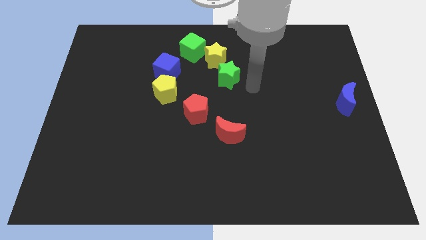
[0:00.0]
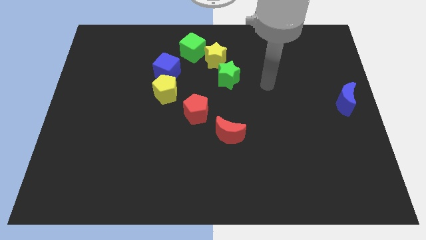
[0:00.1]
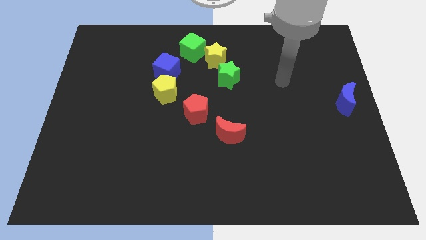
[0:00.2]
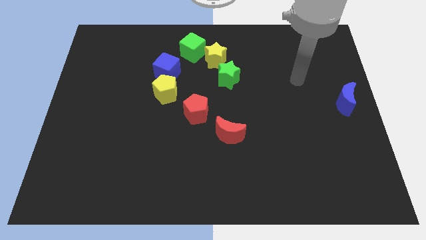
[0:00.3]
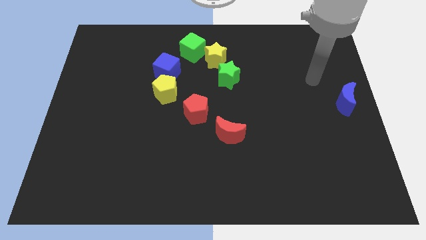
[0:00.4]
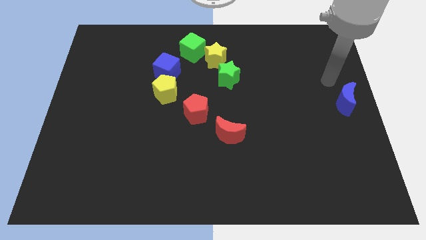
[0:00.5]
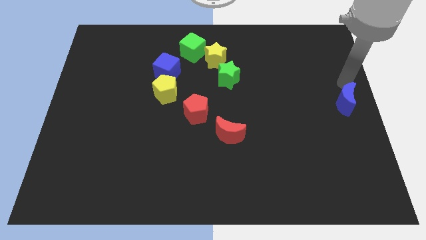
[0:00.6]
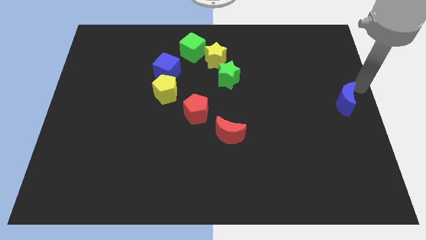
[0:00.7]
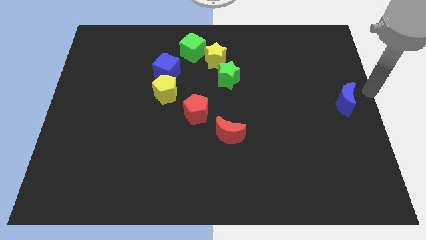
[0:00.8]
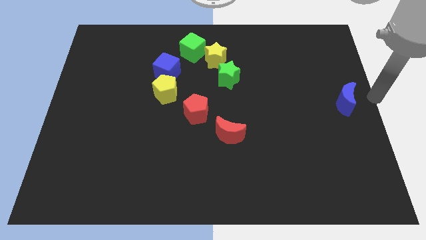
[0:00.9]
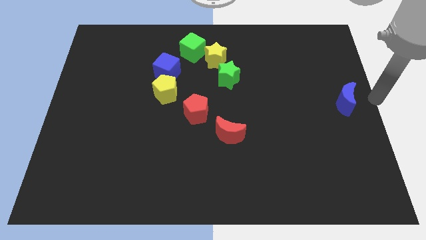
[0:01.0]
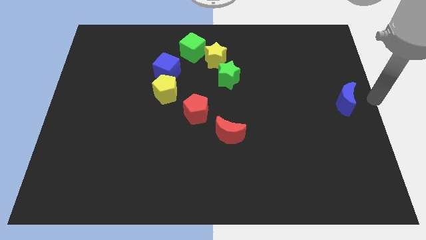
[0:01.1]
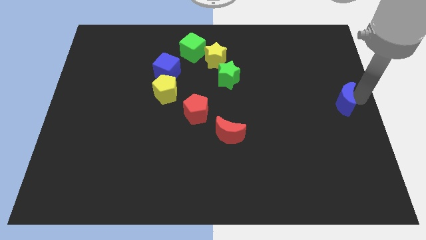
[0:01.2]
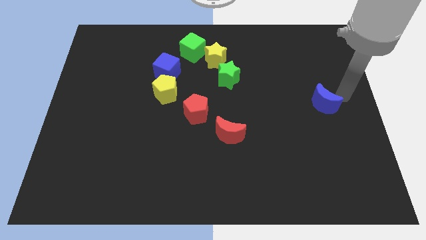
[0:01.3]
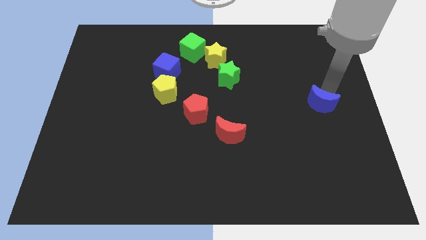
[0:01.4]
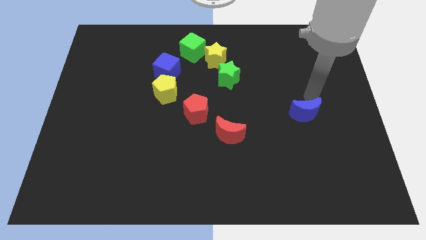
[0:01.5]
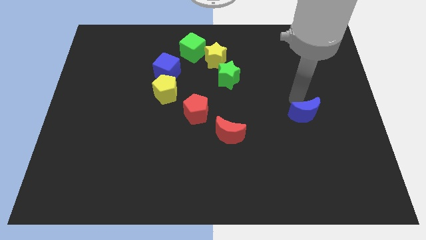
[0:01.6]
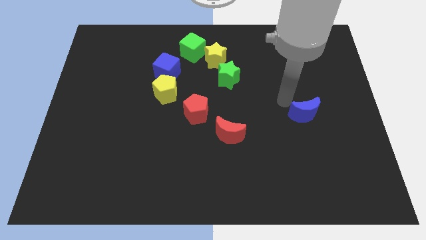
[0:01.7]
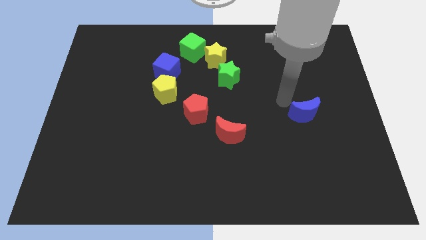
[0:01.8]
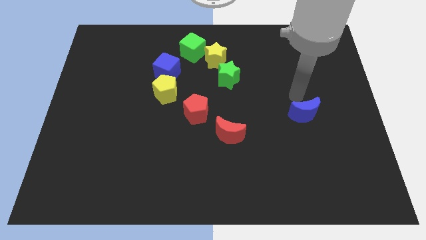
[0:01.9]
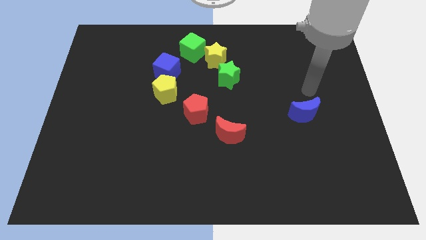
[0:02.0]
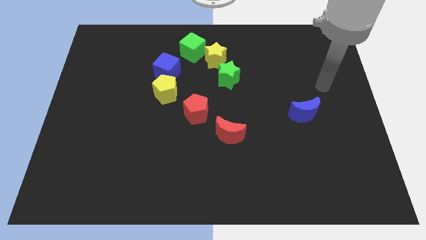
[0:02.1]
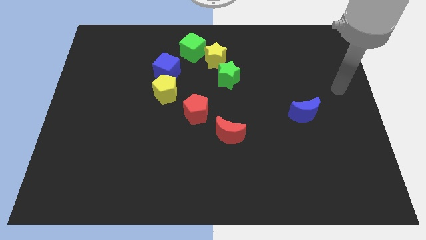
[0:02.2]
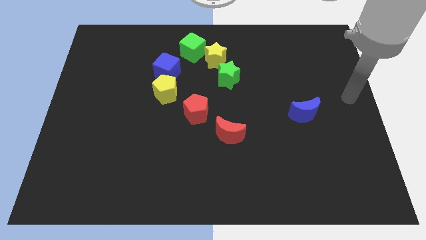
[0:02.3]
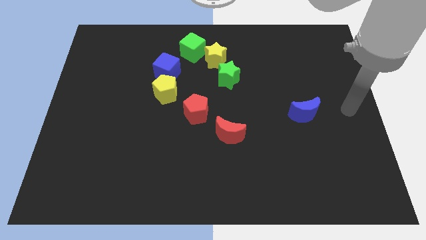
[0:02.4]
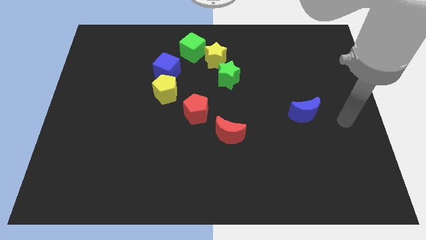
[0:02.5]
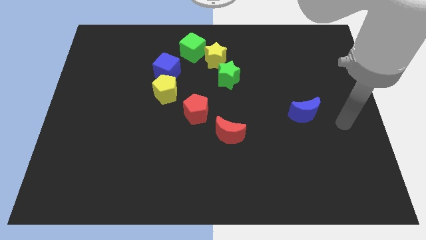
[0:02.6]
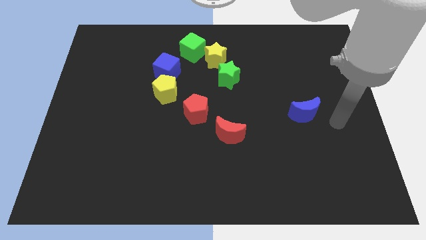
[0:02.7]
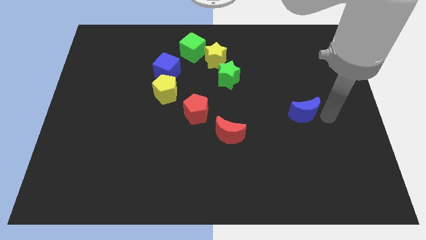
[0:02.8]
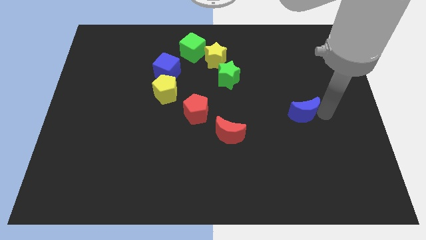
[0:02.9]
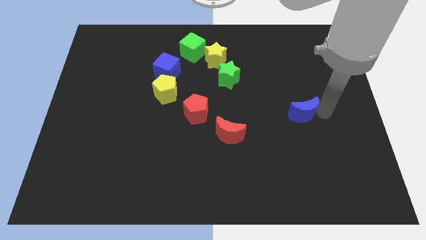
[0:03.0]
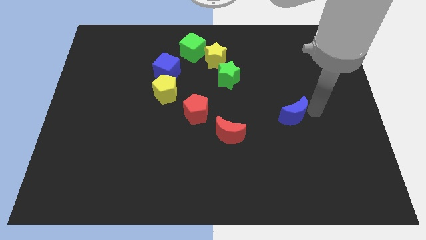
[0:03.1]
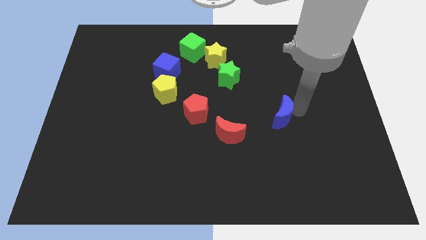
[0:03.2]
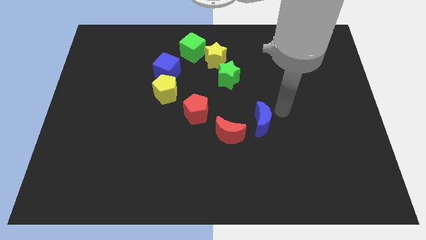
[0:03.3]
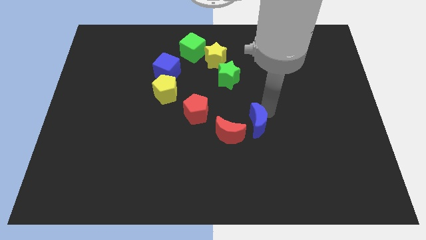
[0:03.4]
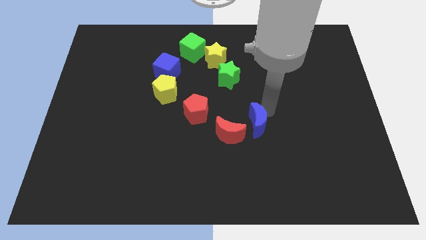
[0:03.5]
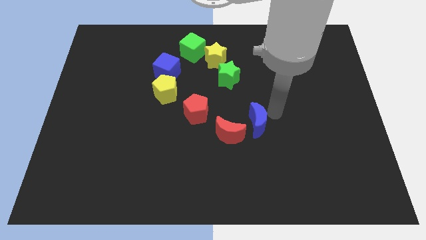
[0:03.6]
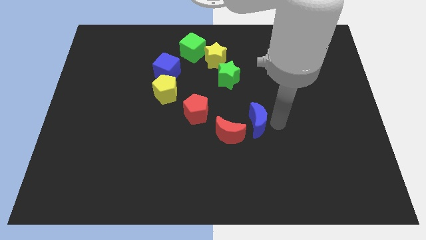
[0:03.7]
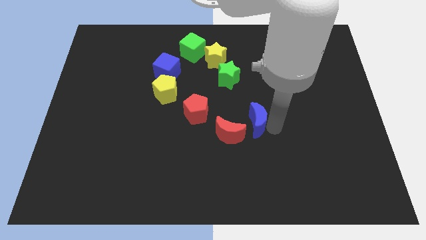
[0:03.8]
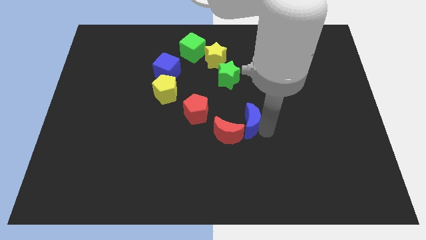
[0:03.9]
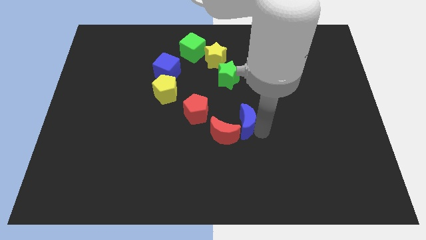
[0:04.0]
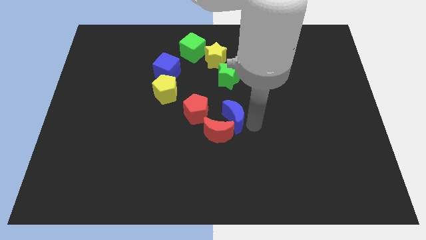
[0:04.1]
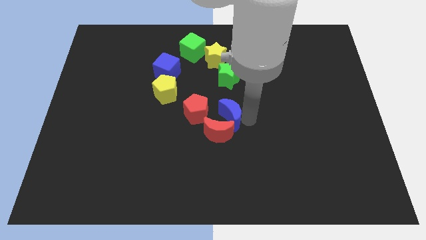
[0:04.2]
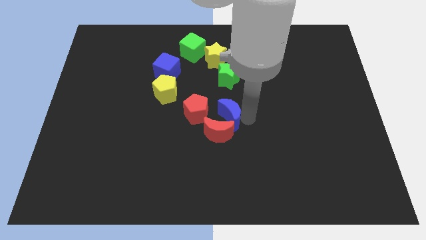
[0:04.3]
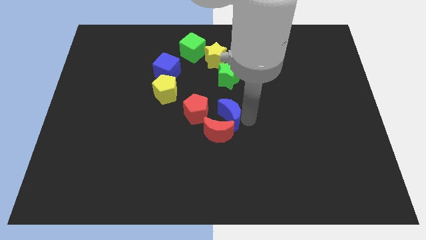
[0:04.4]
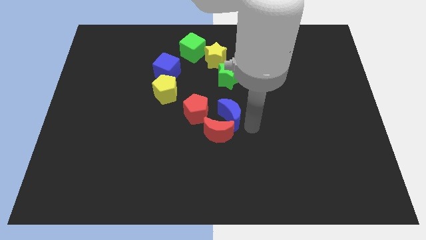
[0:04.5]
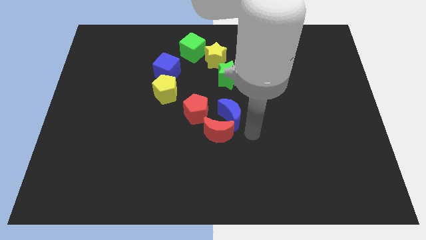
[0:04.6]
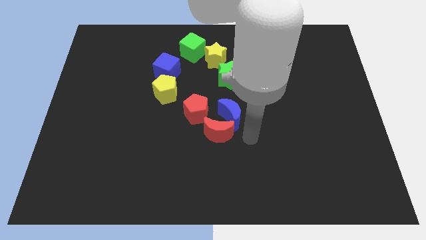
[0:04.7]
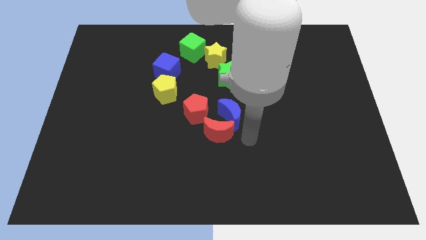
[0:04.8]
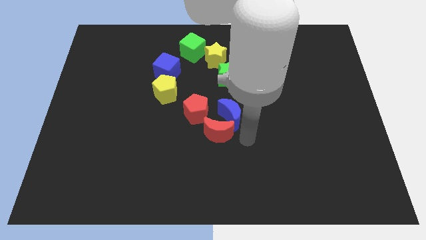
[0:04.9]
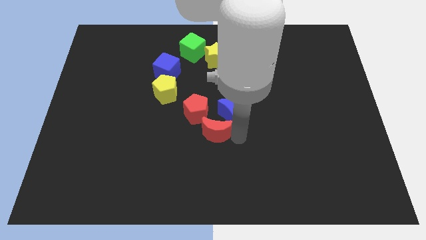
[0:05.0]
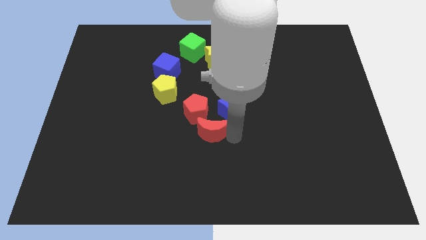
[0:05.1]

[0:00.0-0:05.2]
place the blue crescent above the red crescent

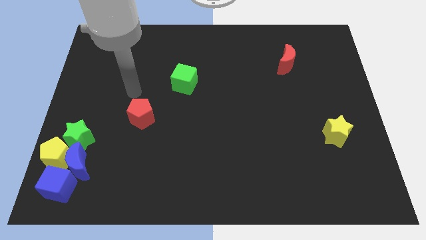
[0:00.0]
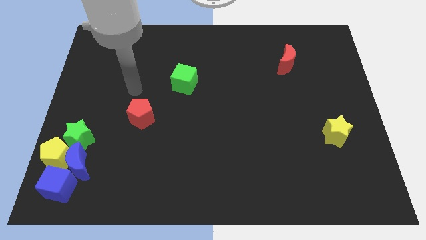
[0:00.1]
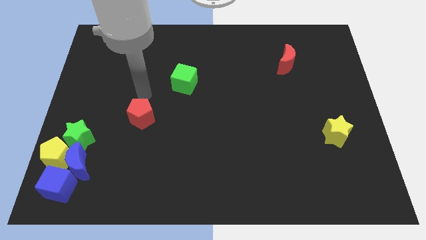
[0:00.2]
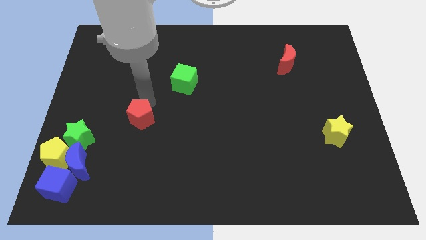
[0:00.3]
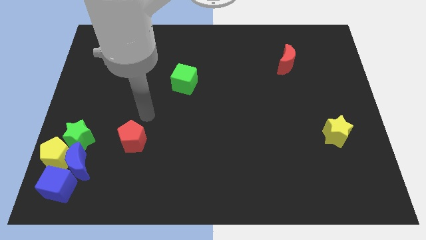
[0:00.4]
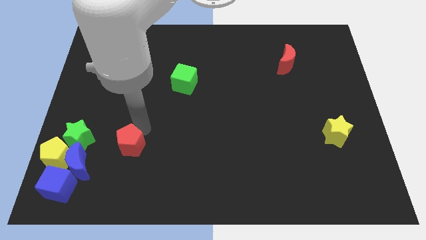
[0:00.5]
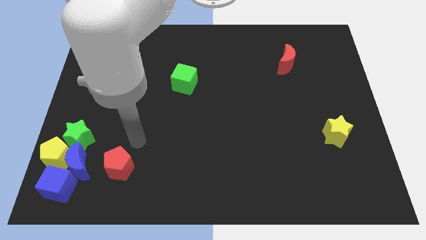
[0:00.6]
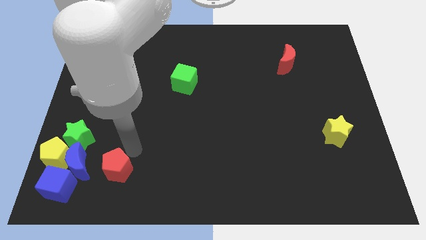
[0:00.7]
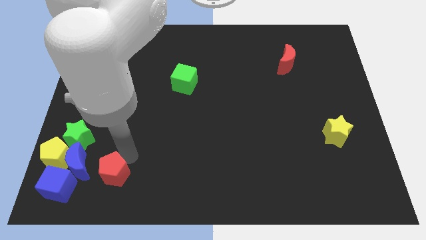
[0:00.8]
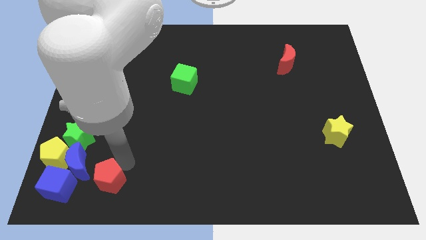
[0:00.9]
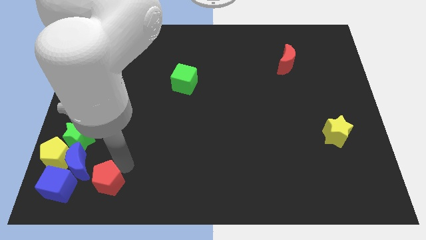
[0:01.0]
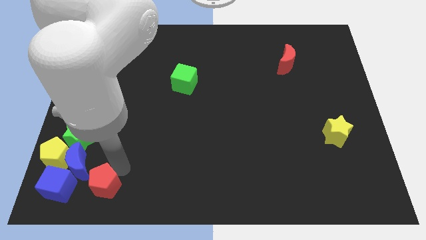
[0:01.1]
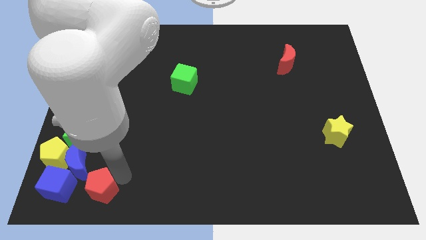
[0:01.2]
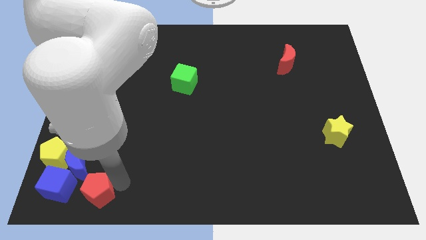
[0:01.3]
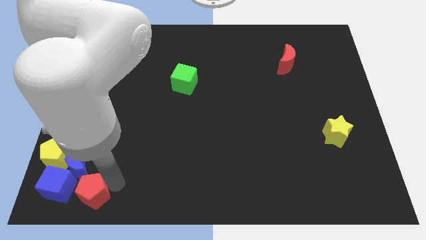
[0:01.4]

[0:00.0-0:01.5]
place the red pentagon right to the blue cube

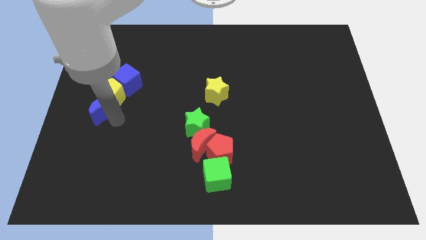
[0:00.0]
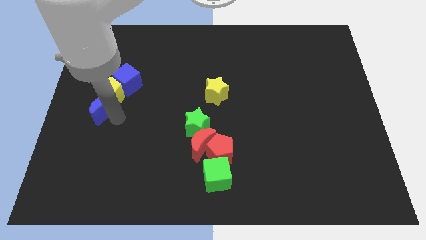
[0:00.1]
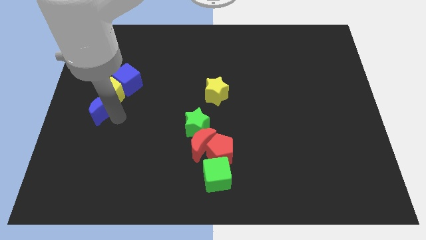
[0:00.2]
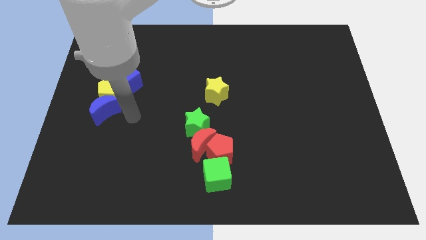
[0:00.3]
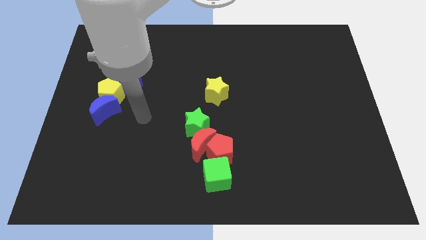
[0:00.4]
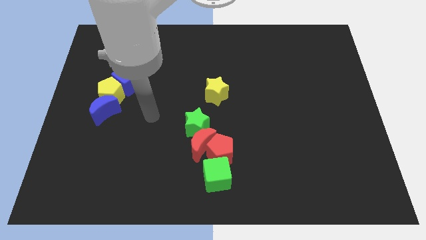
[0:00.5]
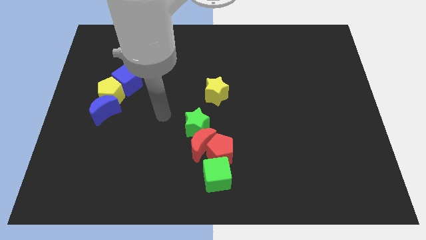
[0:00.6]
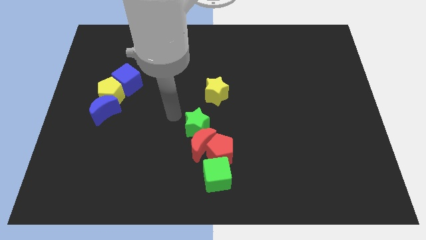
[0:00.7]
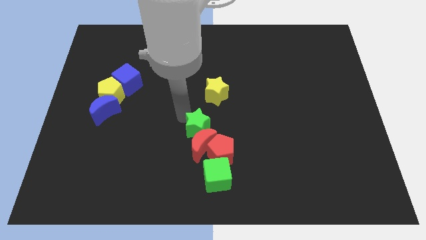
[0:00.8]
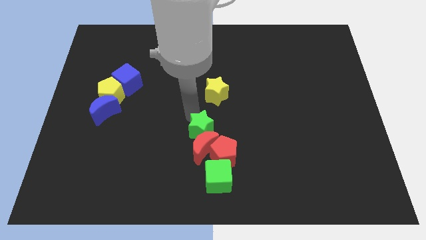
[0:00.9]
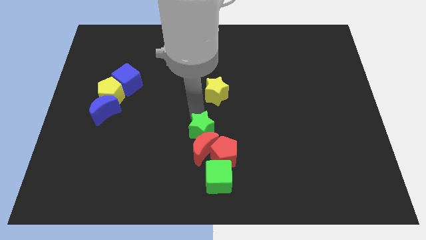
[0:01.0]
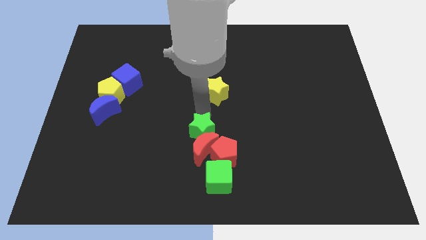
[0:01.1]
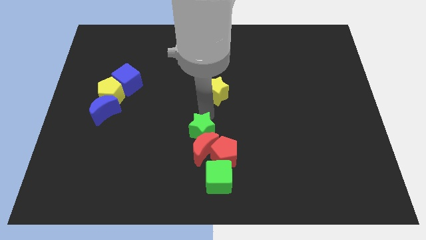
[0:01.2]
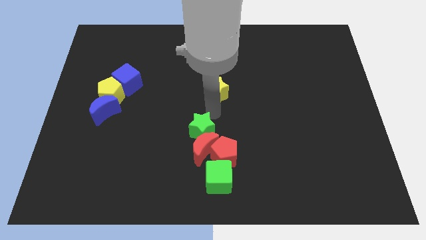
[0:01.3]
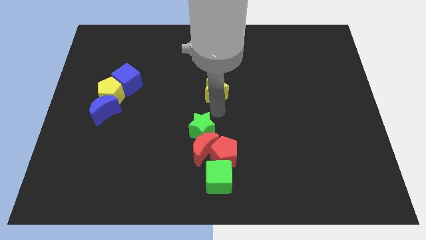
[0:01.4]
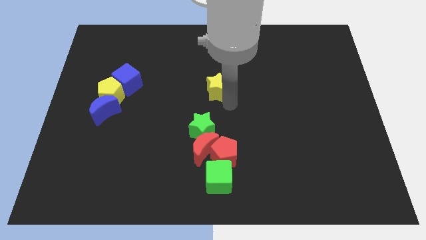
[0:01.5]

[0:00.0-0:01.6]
tap the green star

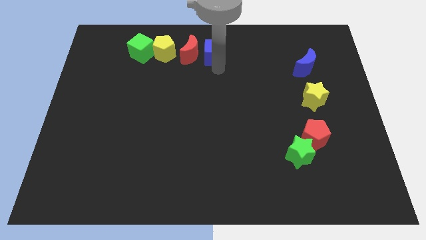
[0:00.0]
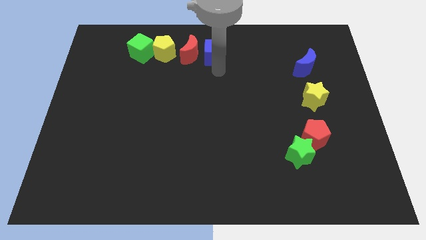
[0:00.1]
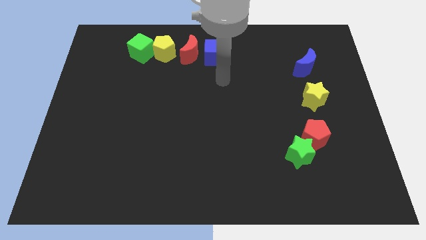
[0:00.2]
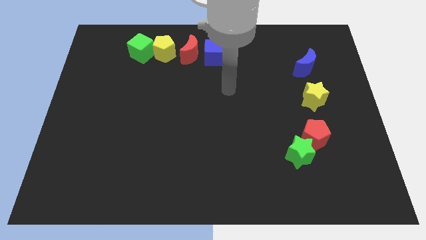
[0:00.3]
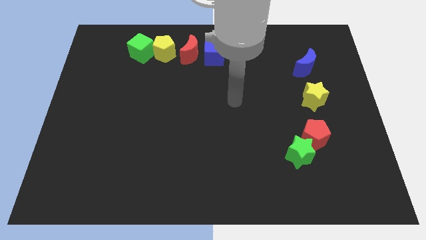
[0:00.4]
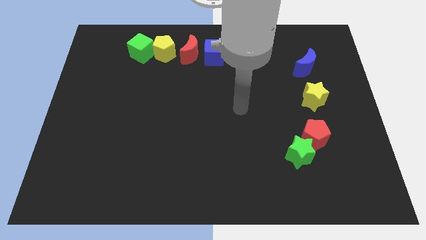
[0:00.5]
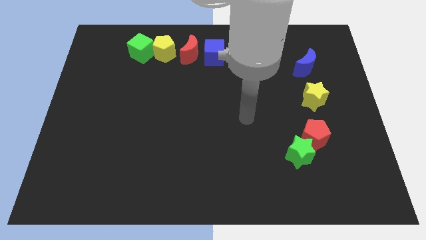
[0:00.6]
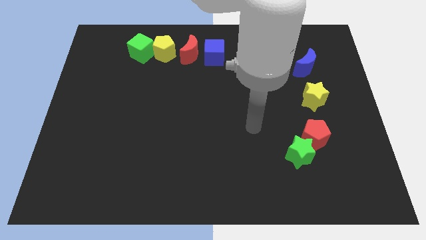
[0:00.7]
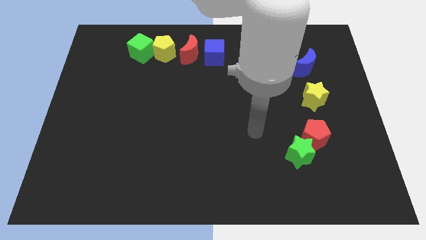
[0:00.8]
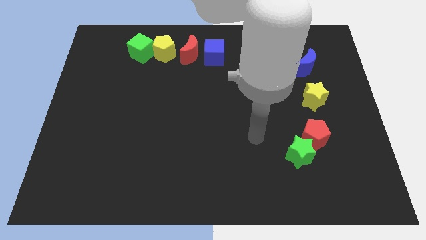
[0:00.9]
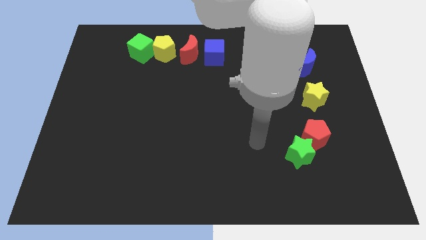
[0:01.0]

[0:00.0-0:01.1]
move your arm away from blue cube
